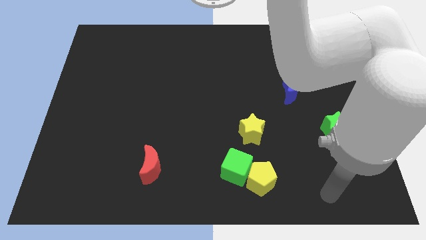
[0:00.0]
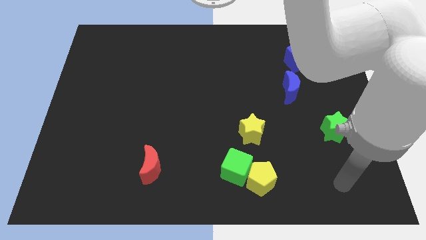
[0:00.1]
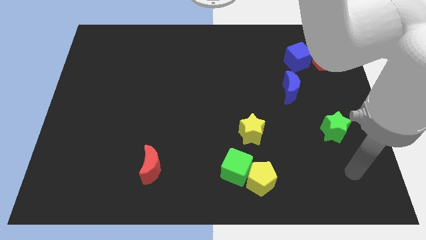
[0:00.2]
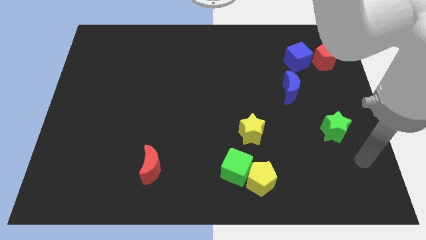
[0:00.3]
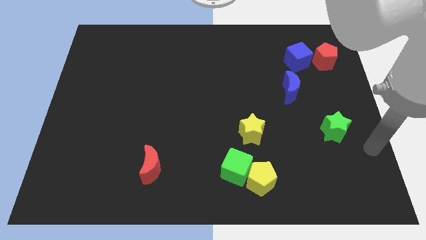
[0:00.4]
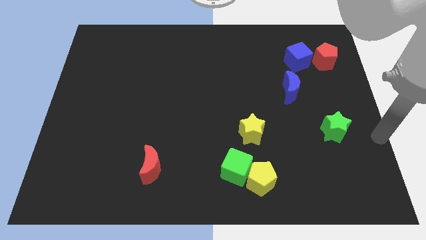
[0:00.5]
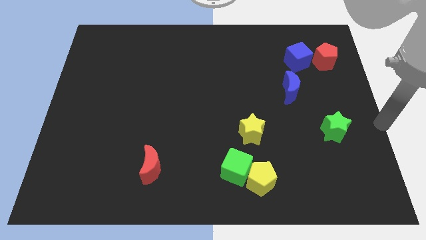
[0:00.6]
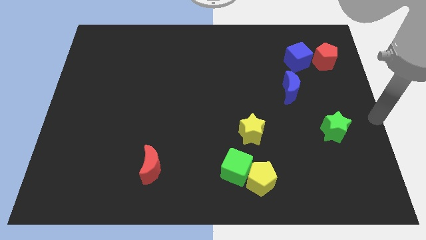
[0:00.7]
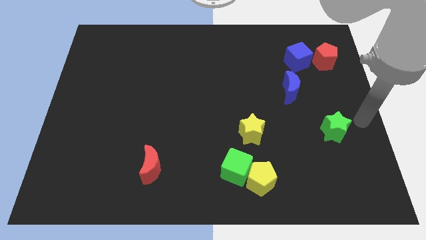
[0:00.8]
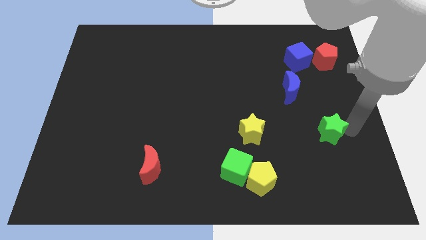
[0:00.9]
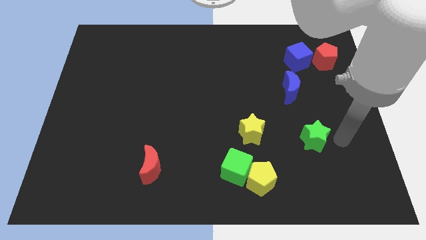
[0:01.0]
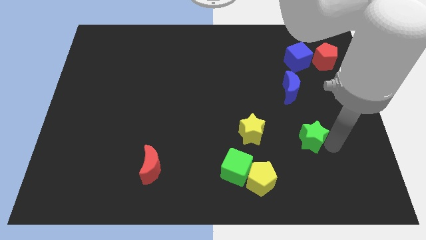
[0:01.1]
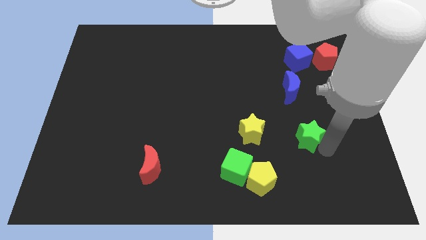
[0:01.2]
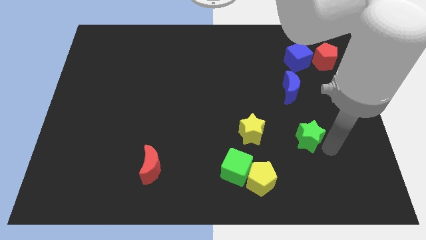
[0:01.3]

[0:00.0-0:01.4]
drag the green star diagonally bottom left to the red pentagon

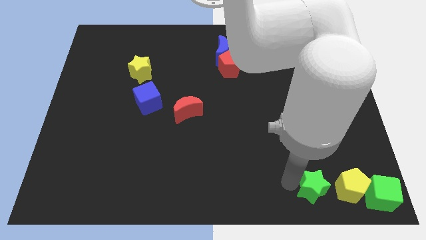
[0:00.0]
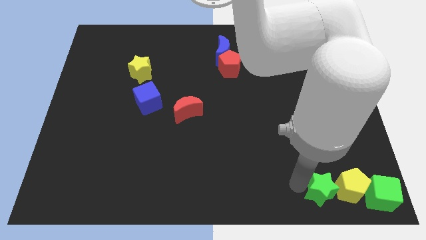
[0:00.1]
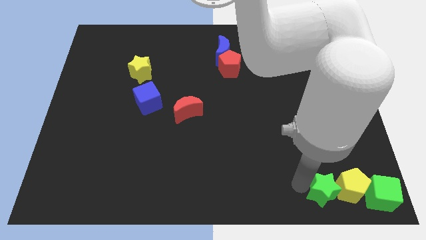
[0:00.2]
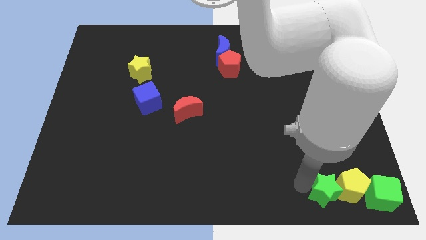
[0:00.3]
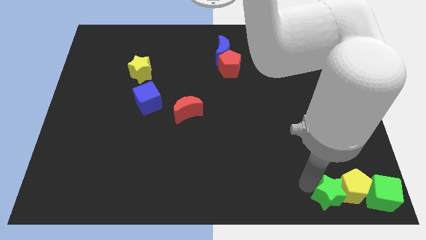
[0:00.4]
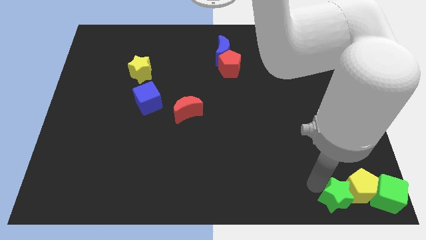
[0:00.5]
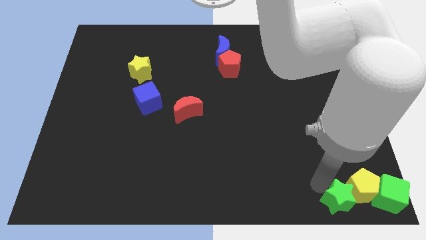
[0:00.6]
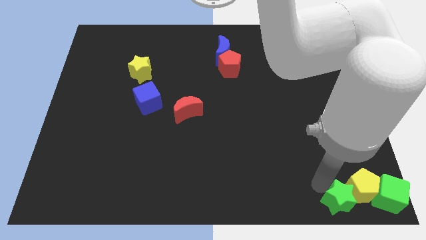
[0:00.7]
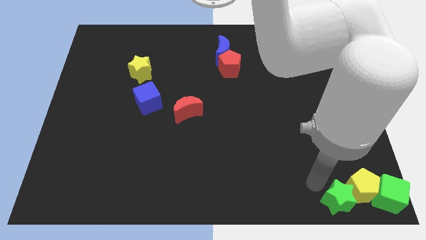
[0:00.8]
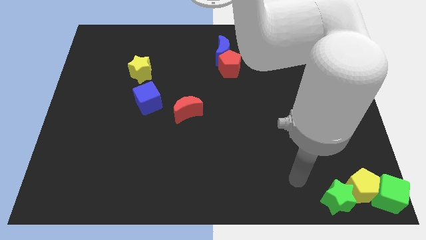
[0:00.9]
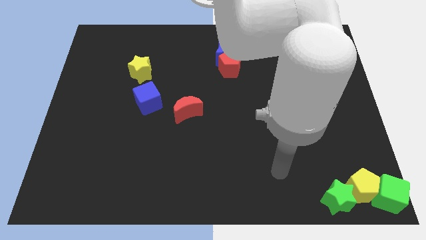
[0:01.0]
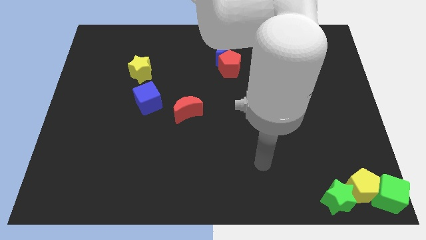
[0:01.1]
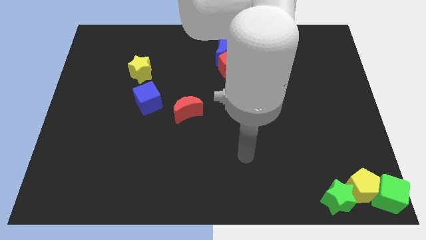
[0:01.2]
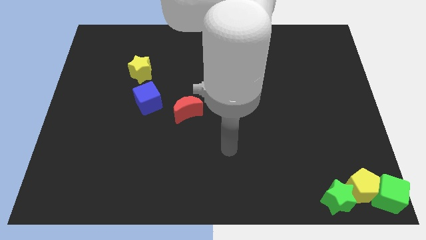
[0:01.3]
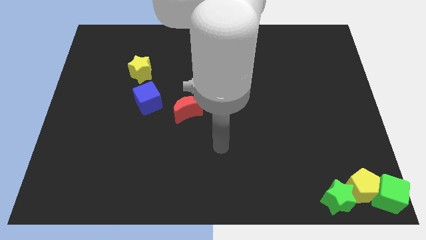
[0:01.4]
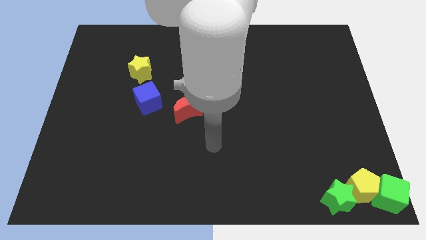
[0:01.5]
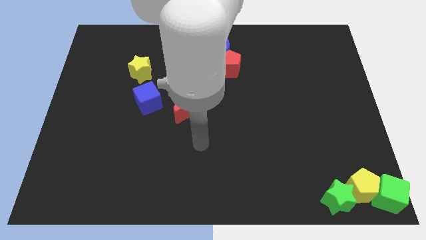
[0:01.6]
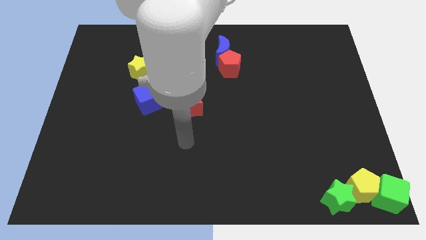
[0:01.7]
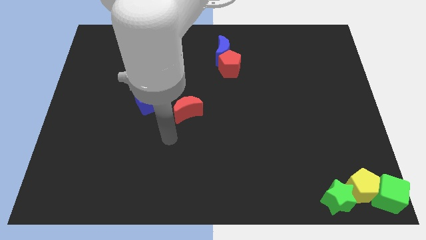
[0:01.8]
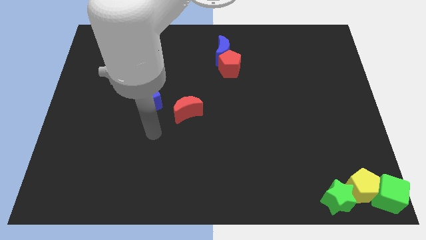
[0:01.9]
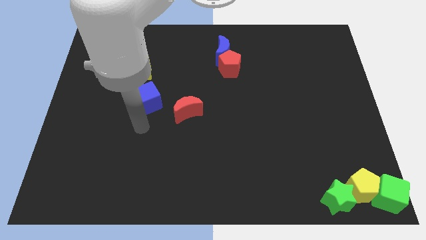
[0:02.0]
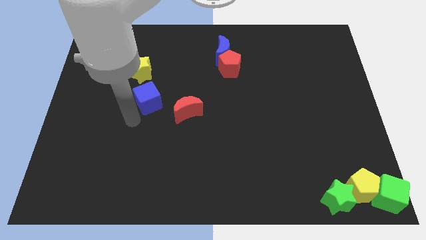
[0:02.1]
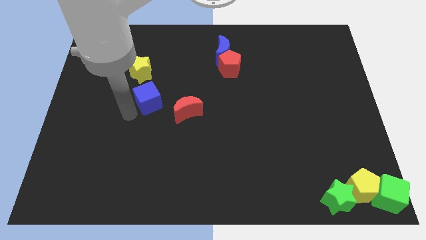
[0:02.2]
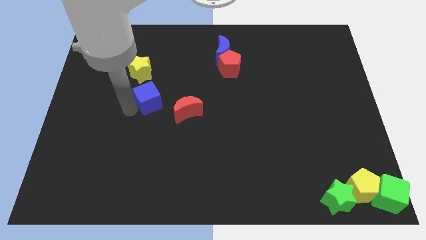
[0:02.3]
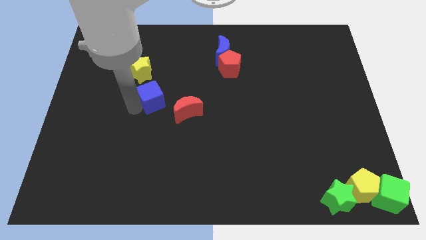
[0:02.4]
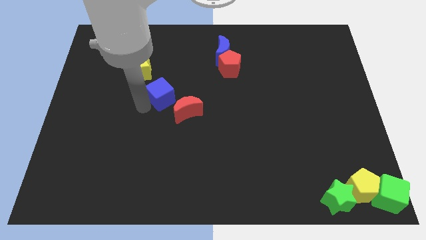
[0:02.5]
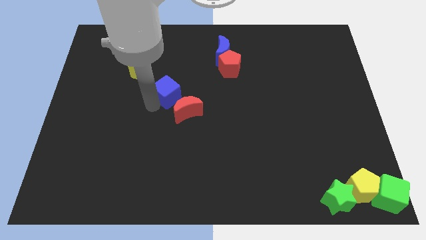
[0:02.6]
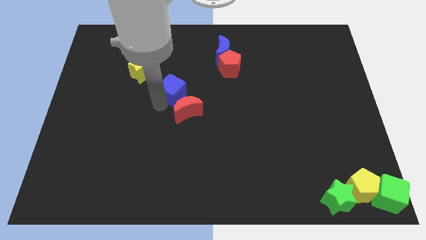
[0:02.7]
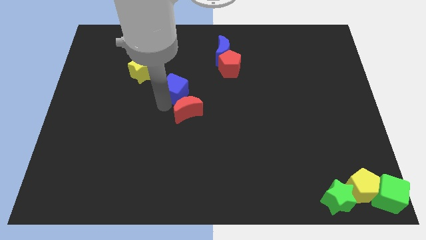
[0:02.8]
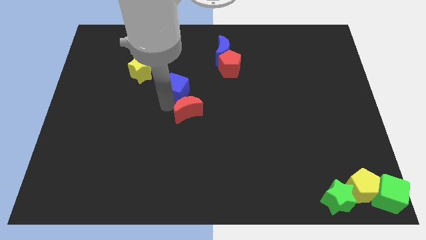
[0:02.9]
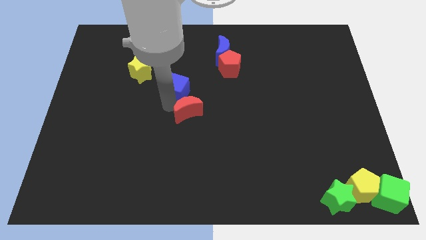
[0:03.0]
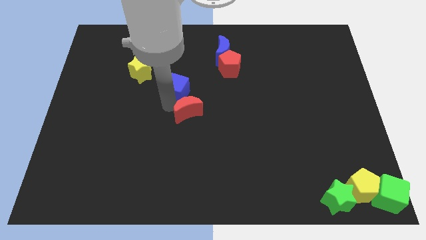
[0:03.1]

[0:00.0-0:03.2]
place blue cube above red crescent

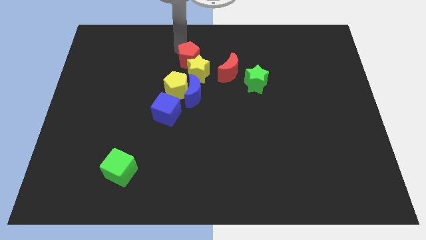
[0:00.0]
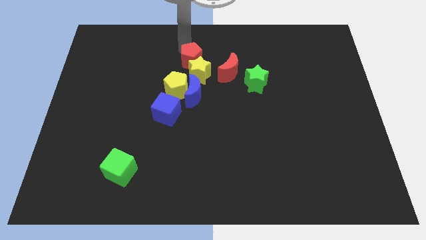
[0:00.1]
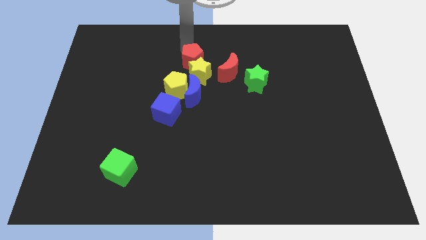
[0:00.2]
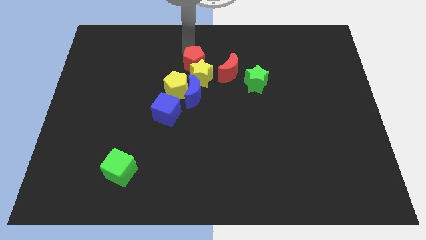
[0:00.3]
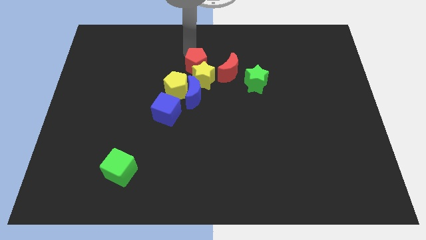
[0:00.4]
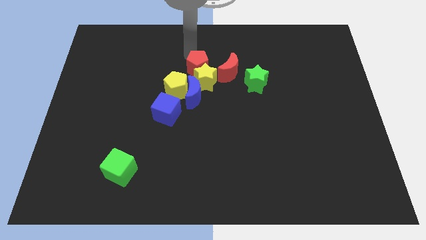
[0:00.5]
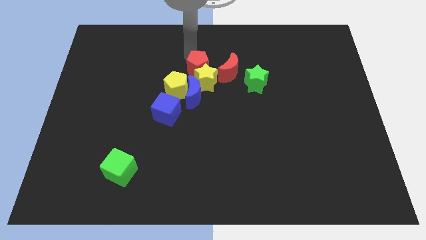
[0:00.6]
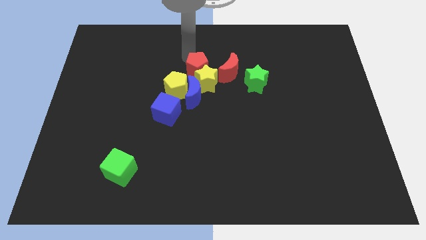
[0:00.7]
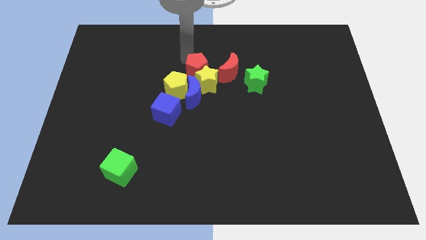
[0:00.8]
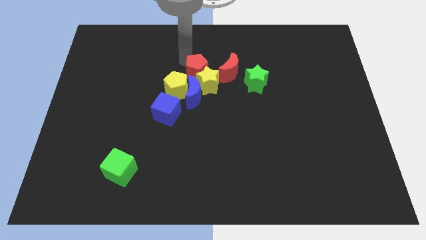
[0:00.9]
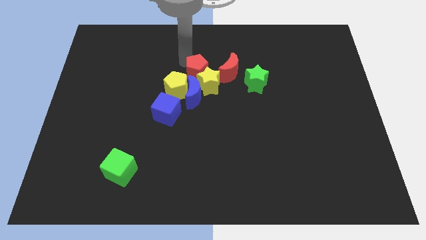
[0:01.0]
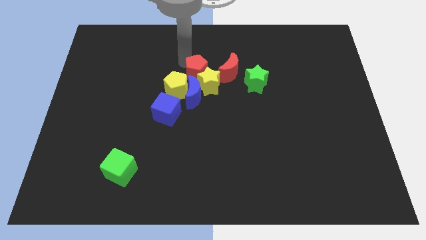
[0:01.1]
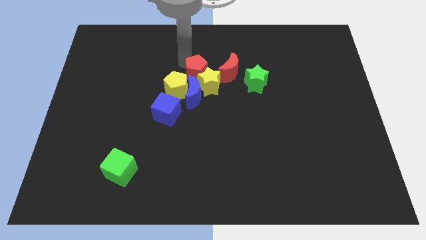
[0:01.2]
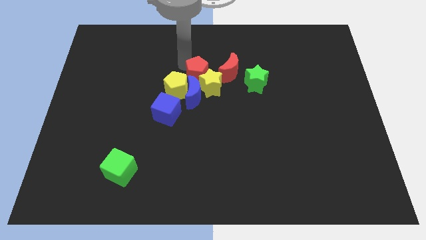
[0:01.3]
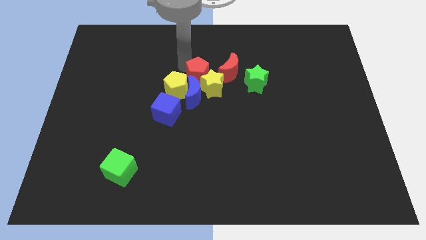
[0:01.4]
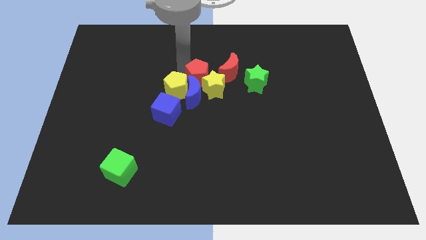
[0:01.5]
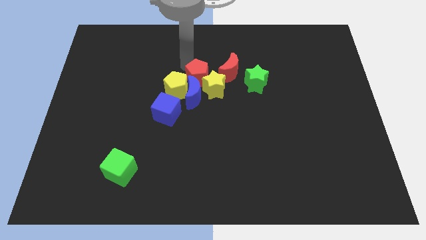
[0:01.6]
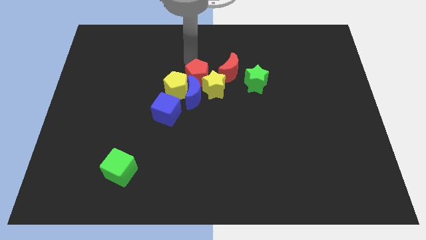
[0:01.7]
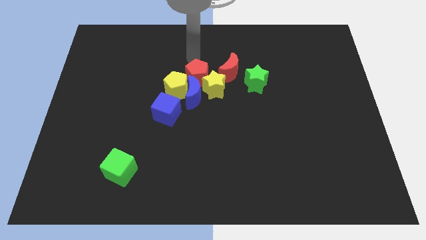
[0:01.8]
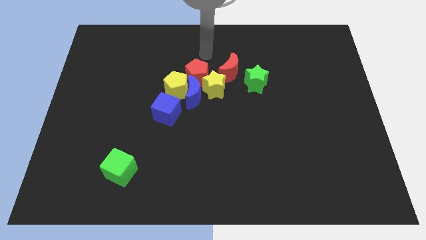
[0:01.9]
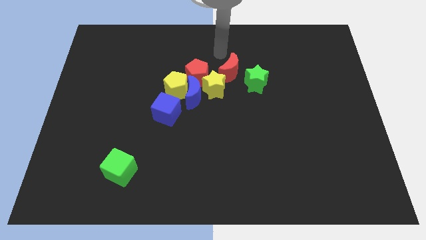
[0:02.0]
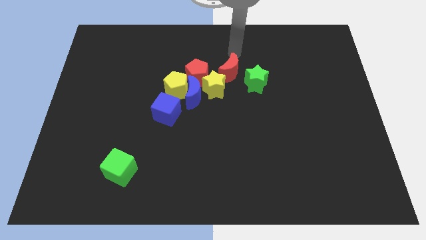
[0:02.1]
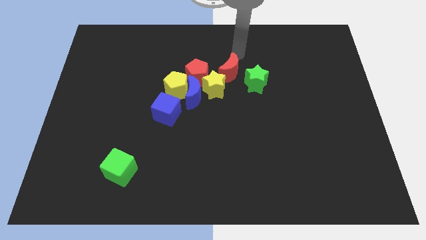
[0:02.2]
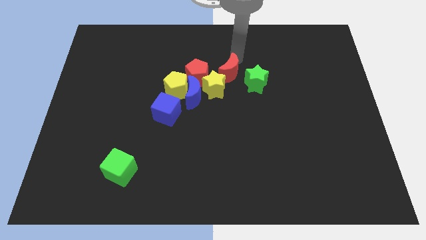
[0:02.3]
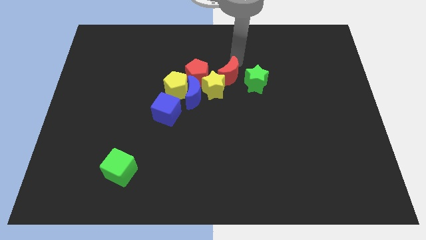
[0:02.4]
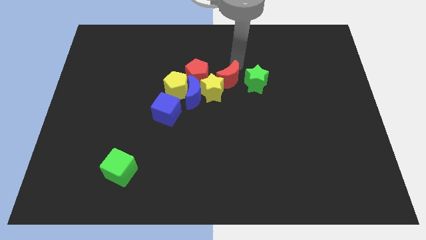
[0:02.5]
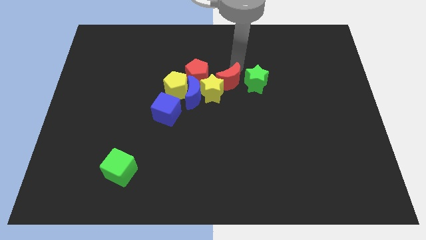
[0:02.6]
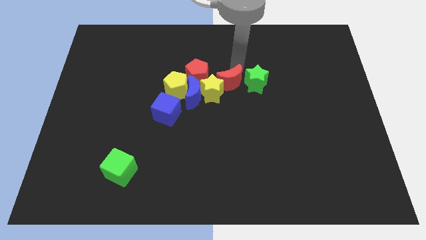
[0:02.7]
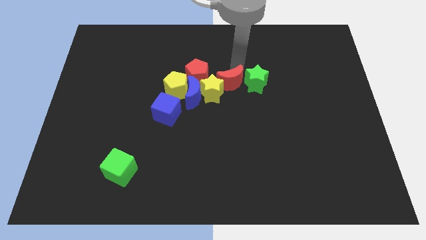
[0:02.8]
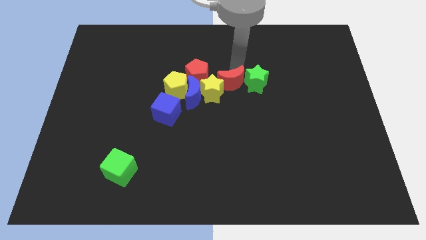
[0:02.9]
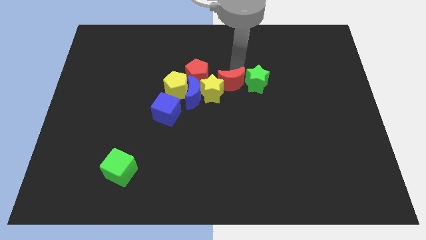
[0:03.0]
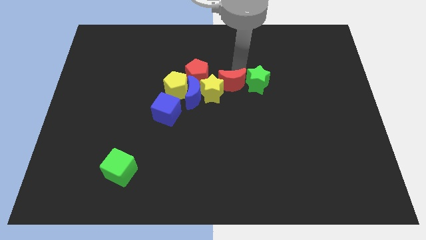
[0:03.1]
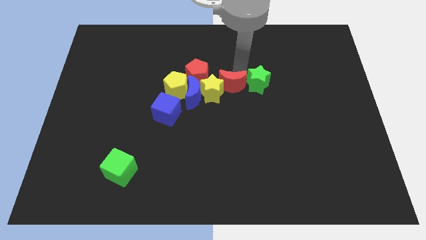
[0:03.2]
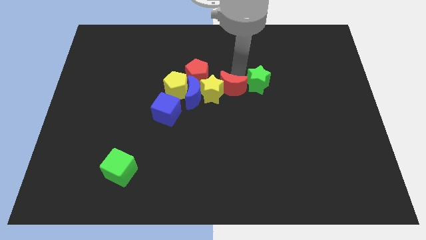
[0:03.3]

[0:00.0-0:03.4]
push red pentagon downwards

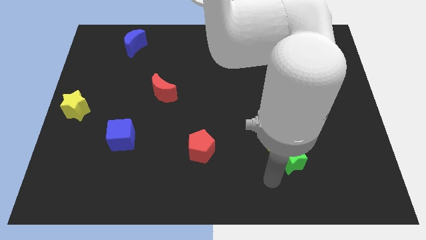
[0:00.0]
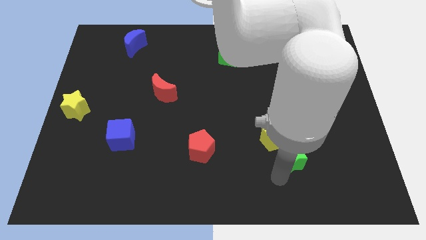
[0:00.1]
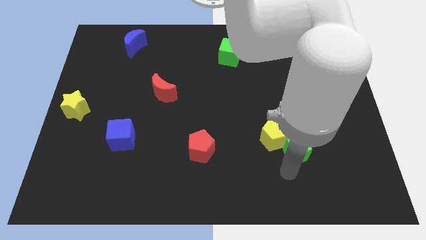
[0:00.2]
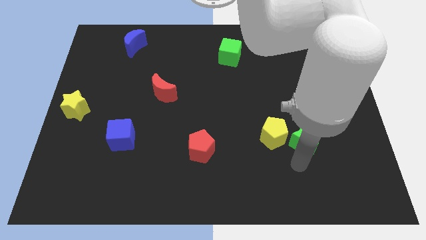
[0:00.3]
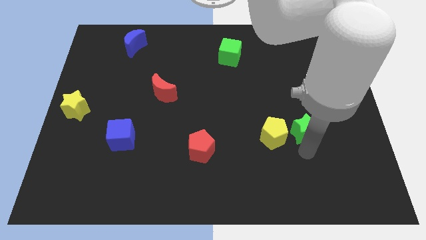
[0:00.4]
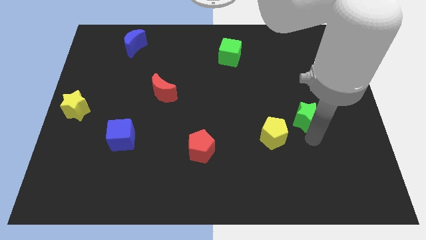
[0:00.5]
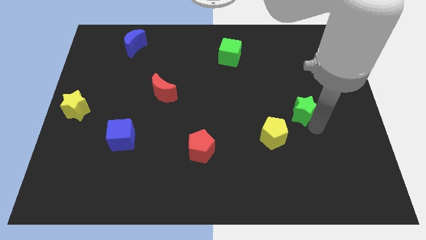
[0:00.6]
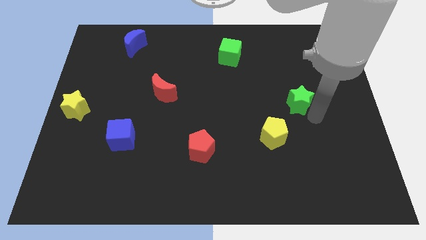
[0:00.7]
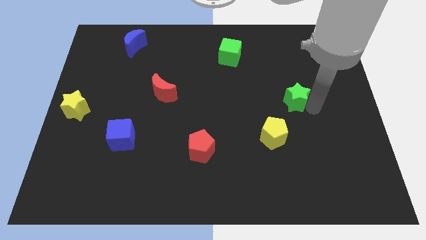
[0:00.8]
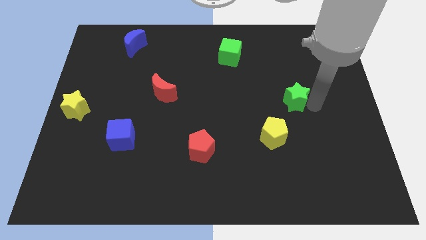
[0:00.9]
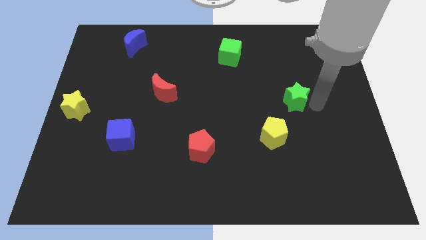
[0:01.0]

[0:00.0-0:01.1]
push green star on top right of yellow pentagon
